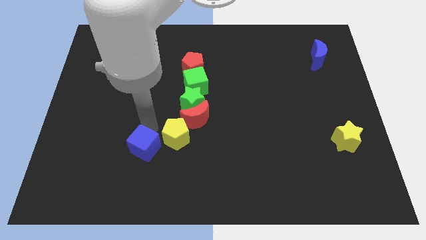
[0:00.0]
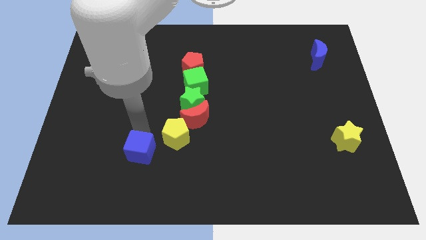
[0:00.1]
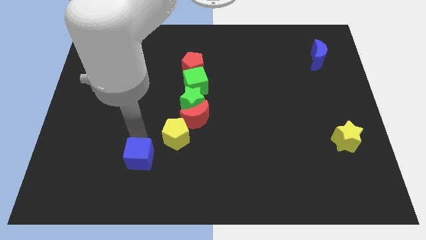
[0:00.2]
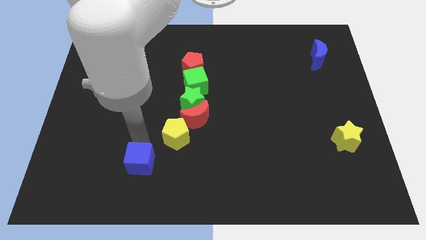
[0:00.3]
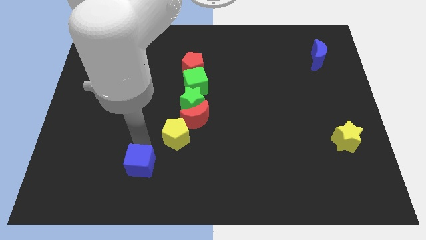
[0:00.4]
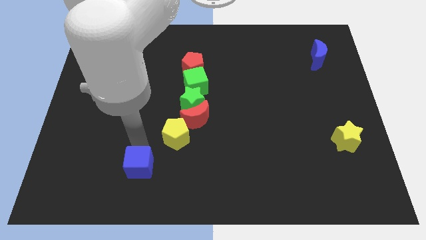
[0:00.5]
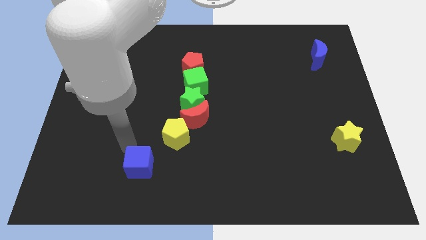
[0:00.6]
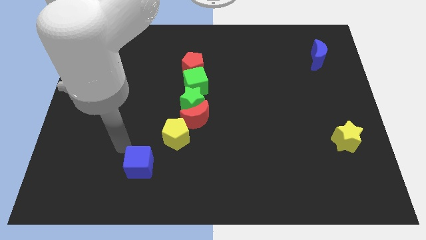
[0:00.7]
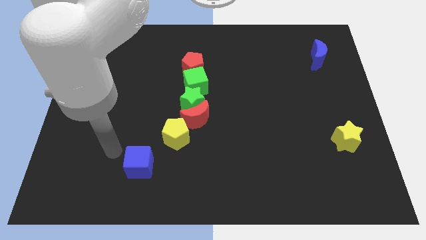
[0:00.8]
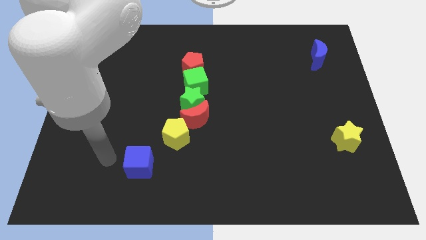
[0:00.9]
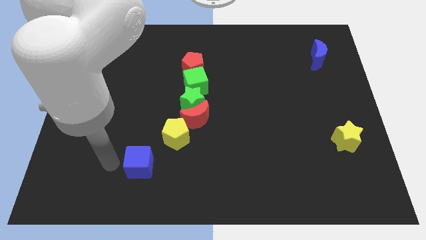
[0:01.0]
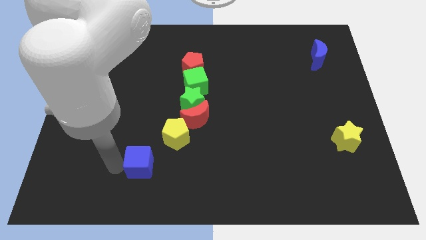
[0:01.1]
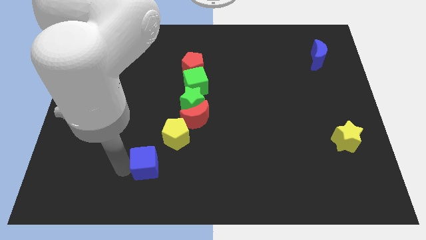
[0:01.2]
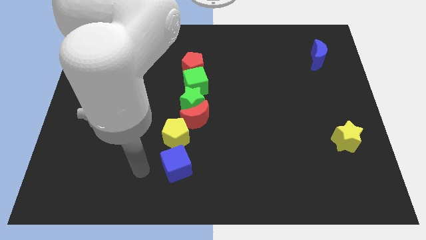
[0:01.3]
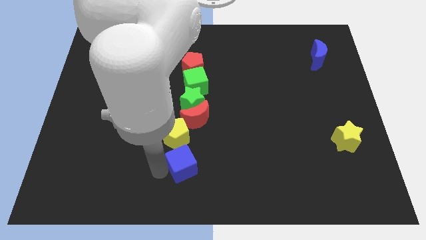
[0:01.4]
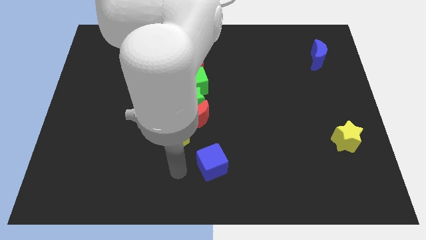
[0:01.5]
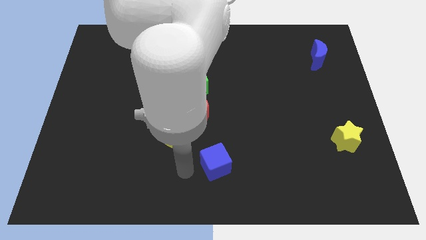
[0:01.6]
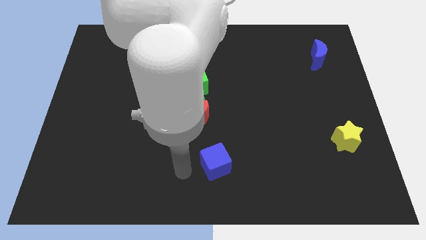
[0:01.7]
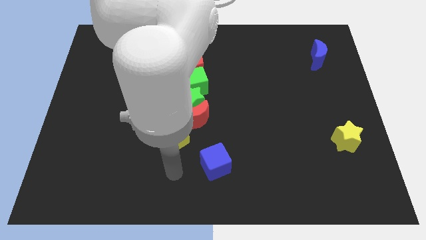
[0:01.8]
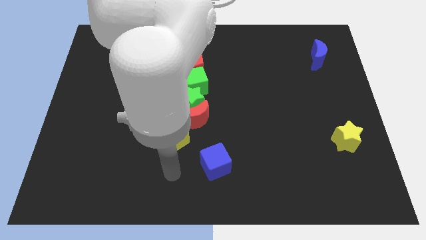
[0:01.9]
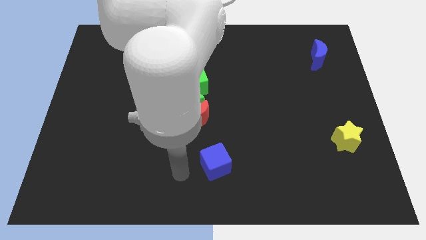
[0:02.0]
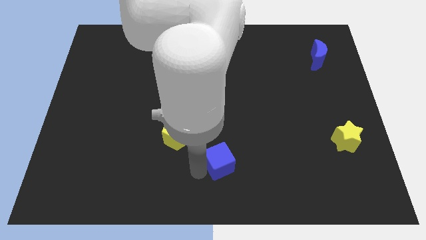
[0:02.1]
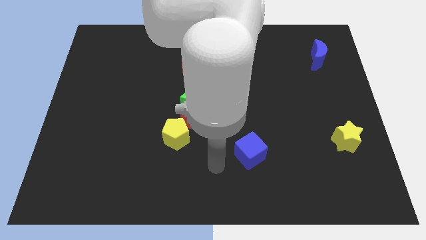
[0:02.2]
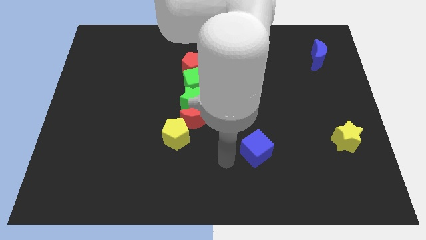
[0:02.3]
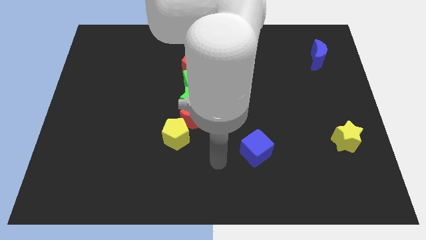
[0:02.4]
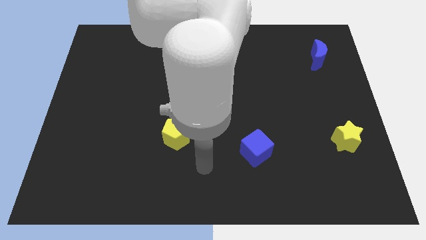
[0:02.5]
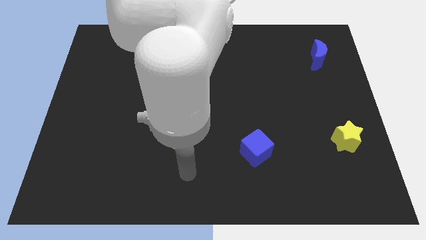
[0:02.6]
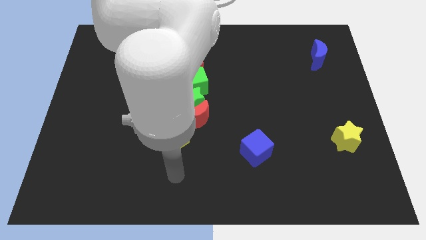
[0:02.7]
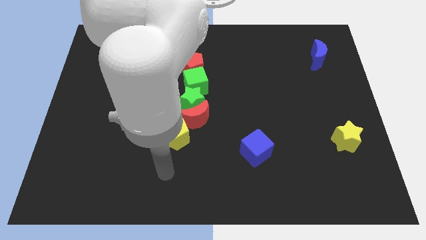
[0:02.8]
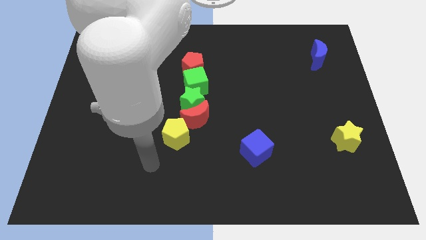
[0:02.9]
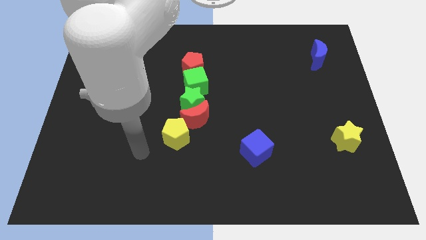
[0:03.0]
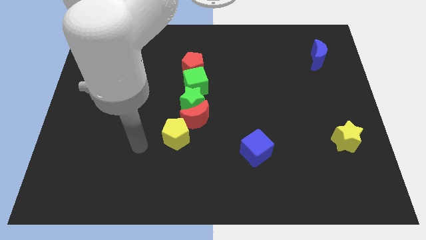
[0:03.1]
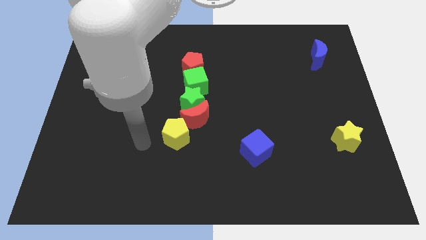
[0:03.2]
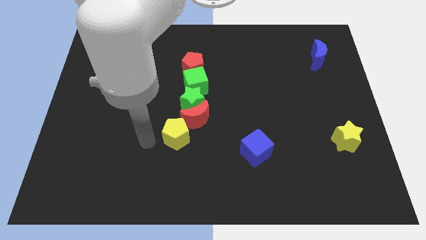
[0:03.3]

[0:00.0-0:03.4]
place the blue cube in between the yellow pentagon and the yellow star

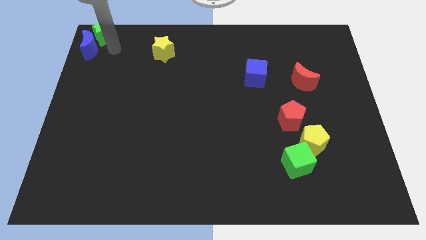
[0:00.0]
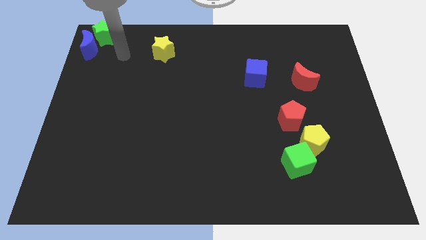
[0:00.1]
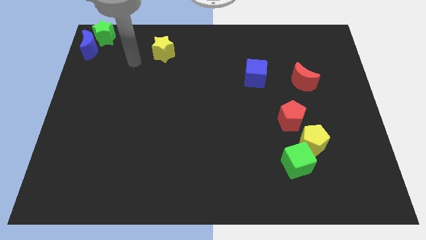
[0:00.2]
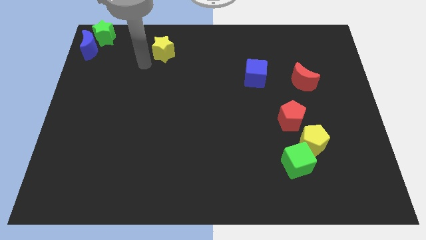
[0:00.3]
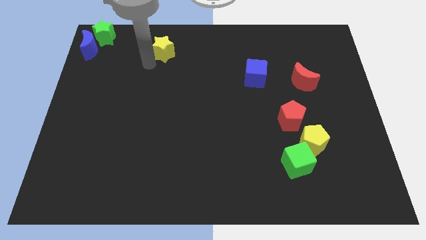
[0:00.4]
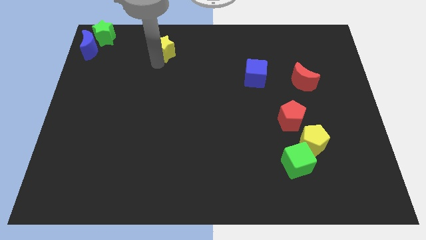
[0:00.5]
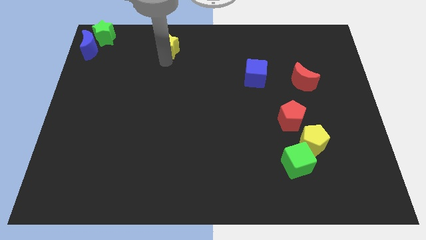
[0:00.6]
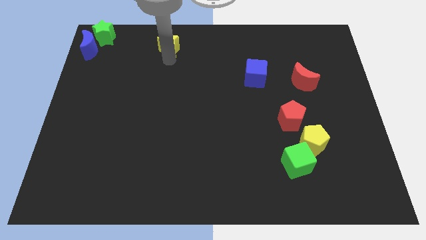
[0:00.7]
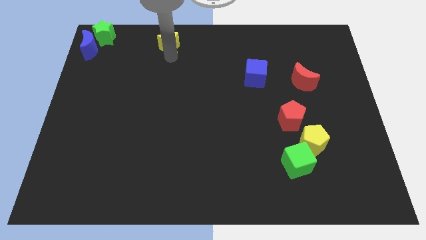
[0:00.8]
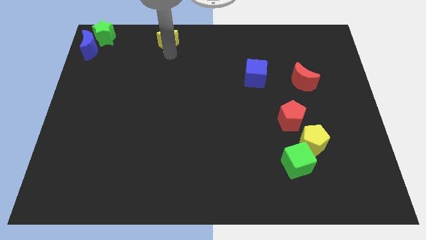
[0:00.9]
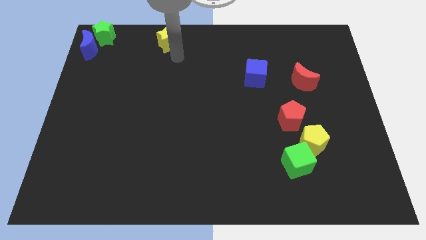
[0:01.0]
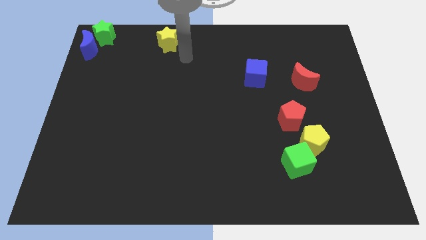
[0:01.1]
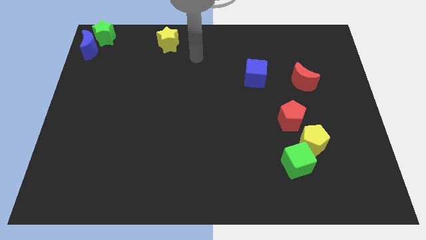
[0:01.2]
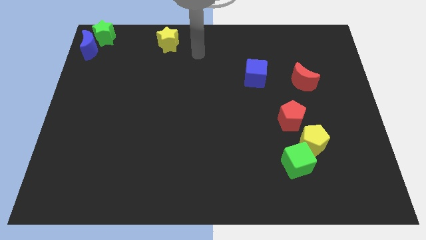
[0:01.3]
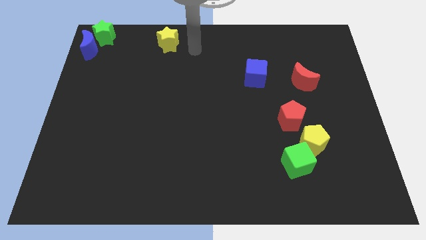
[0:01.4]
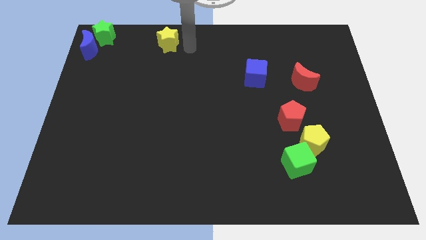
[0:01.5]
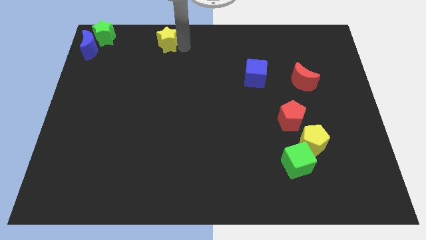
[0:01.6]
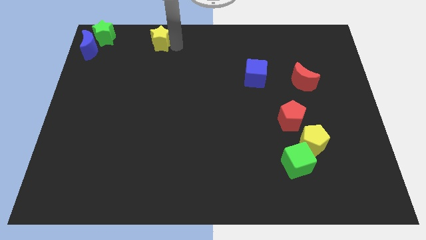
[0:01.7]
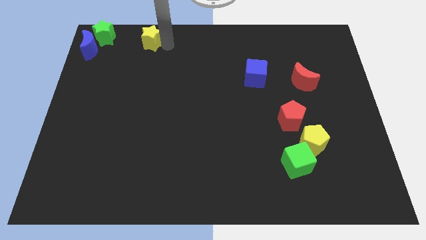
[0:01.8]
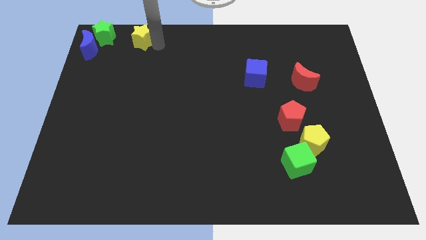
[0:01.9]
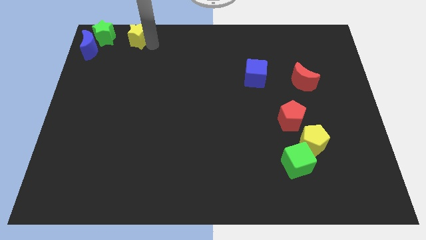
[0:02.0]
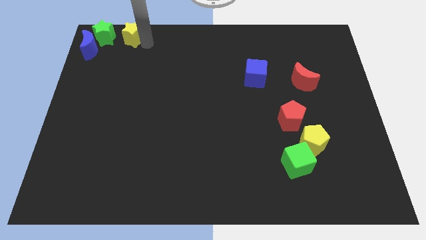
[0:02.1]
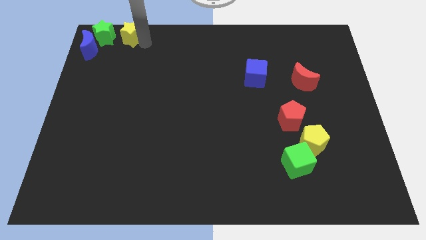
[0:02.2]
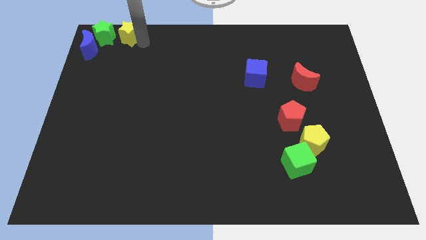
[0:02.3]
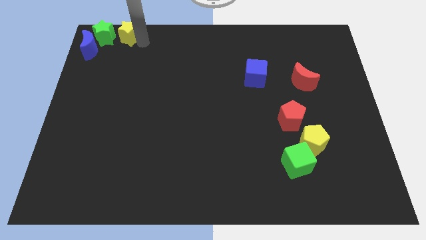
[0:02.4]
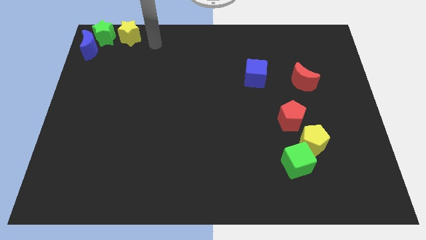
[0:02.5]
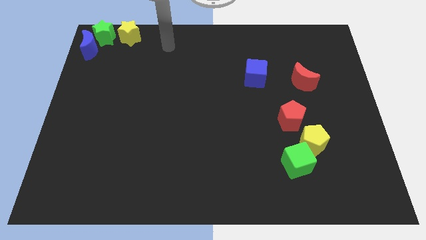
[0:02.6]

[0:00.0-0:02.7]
place yellow star to the right of green star

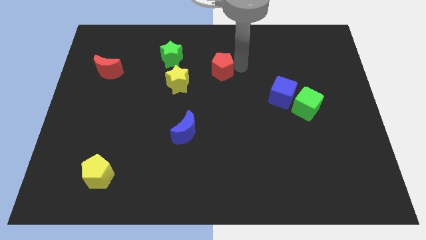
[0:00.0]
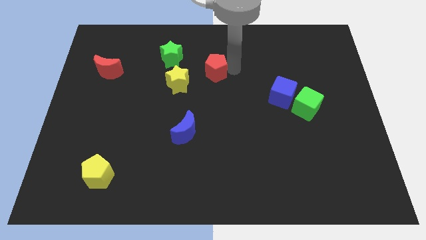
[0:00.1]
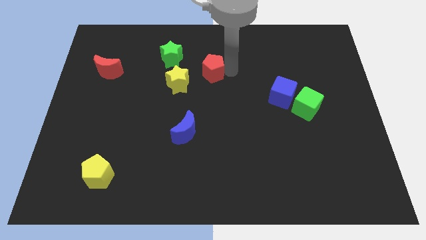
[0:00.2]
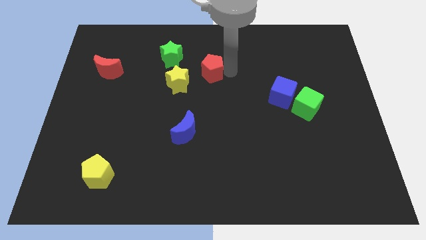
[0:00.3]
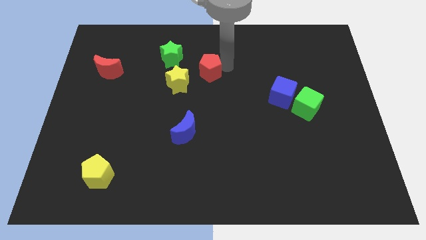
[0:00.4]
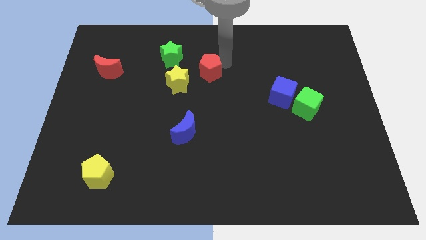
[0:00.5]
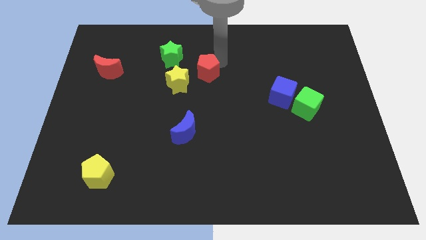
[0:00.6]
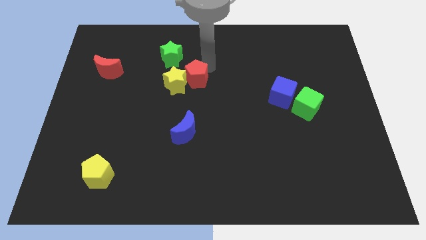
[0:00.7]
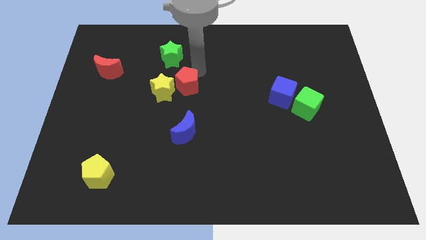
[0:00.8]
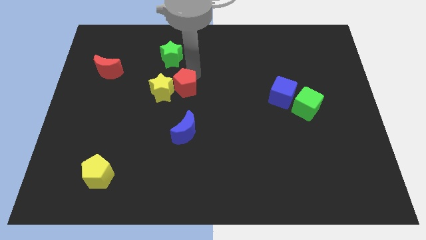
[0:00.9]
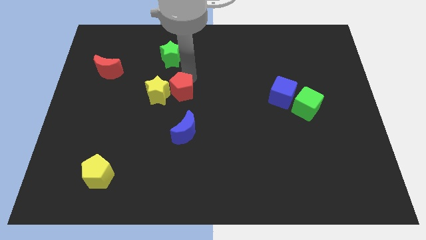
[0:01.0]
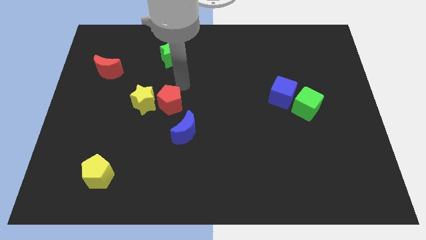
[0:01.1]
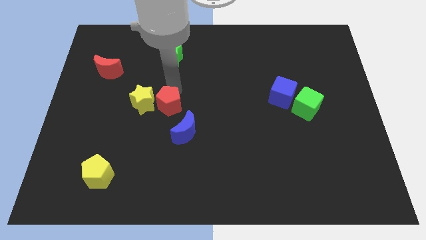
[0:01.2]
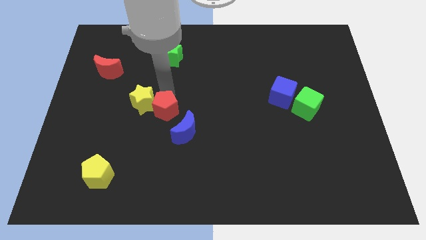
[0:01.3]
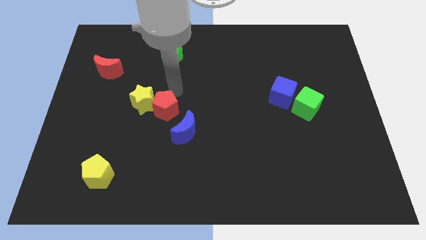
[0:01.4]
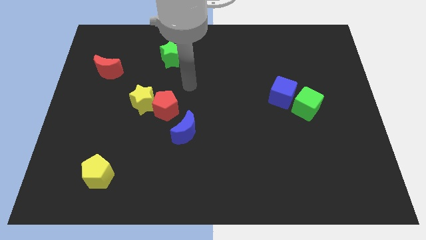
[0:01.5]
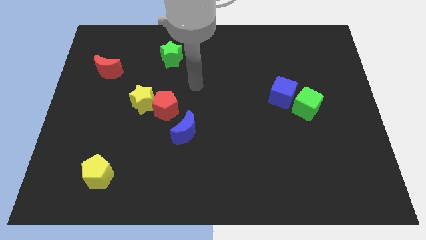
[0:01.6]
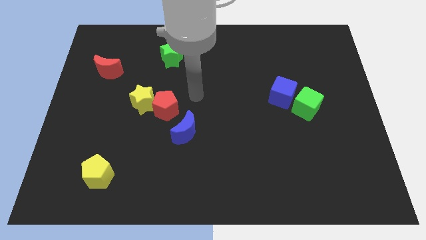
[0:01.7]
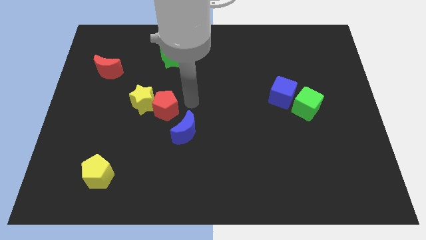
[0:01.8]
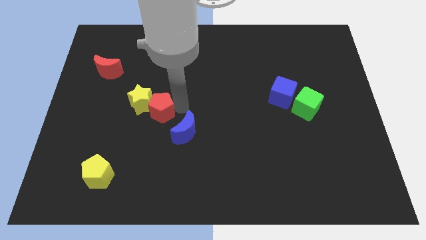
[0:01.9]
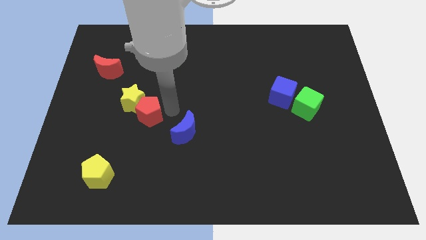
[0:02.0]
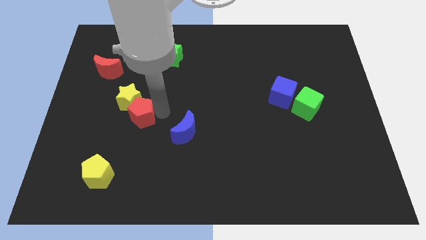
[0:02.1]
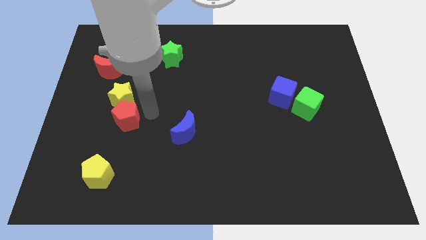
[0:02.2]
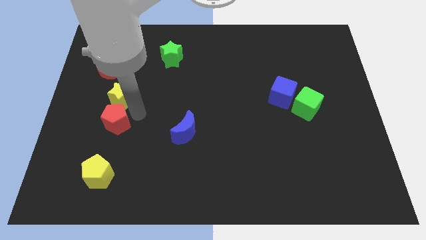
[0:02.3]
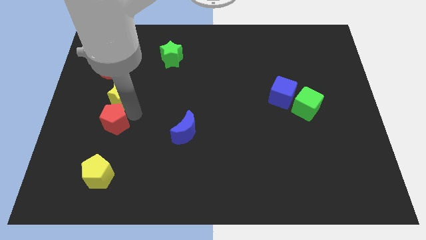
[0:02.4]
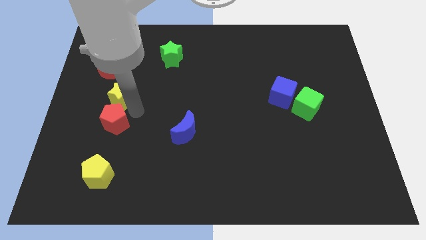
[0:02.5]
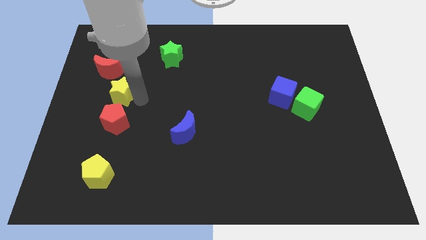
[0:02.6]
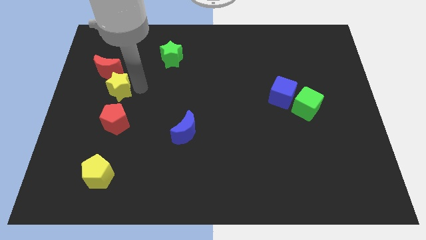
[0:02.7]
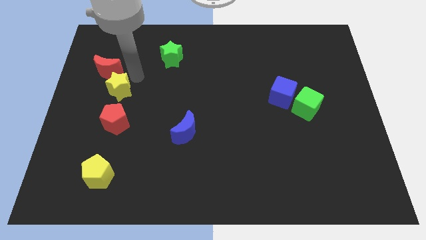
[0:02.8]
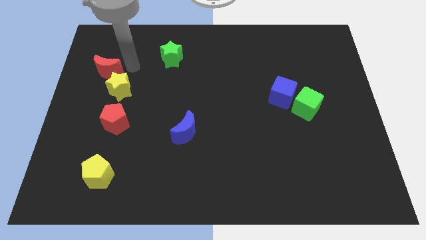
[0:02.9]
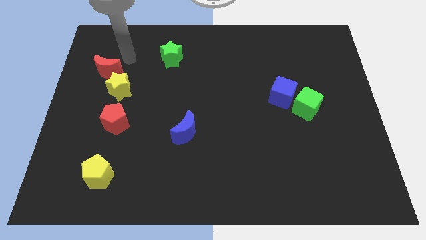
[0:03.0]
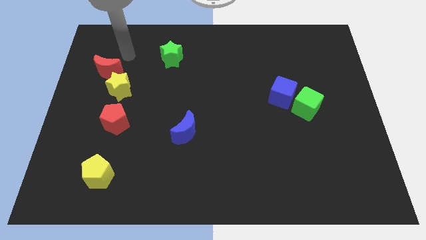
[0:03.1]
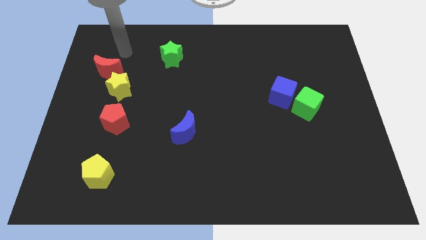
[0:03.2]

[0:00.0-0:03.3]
push the yellow star and red pentagon to the left side
